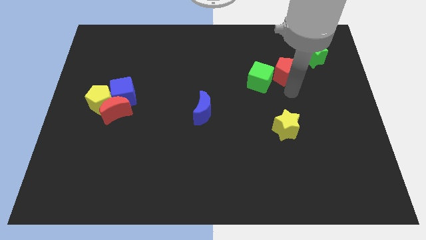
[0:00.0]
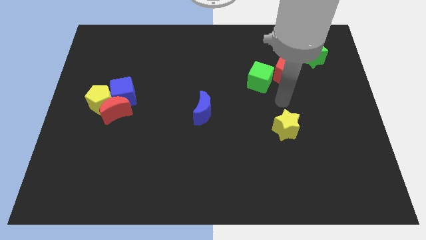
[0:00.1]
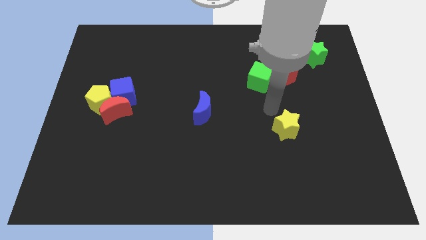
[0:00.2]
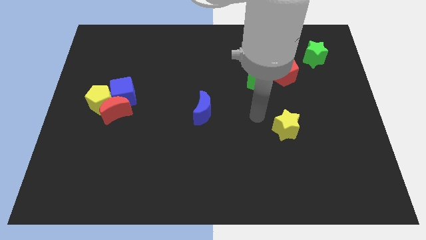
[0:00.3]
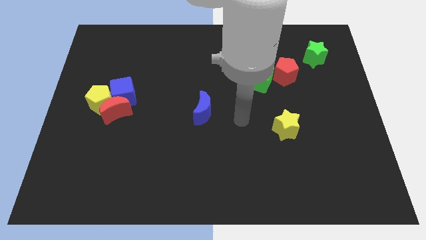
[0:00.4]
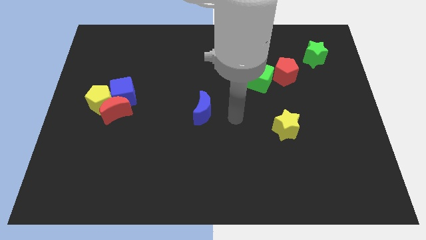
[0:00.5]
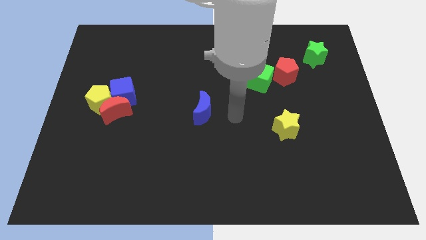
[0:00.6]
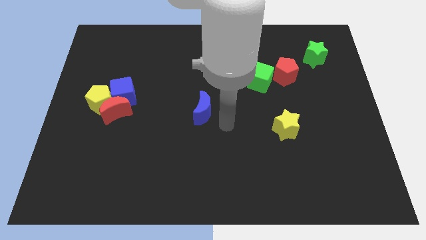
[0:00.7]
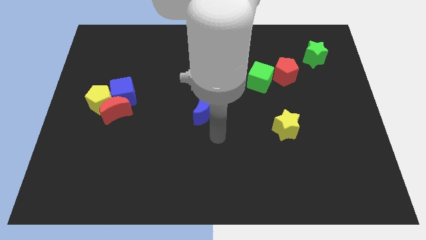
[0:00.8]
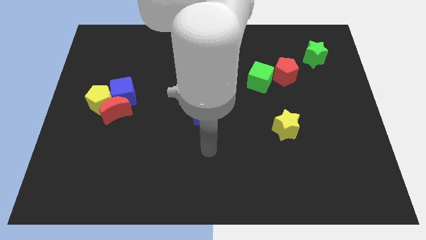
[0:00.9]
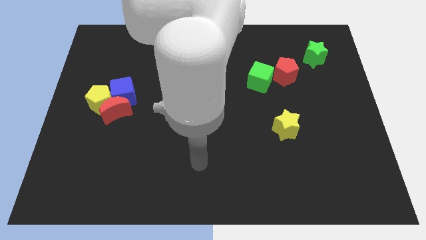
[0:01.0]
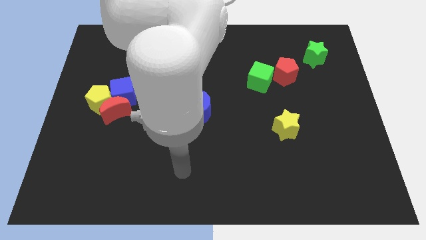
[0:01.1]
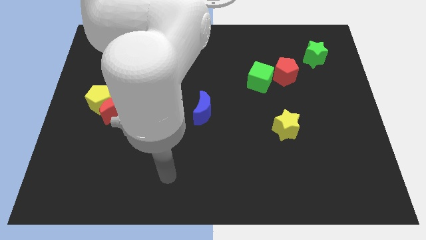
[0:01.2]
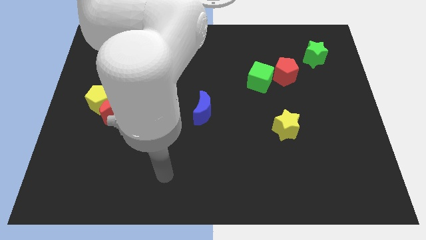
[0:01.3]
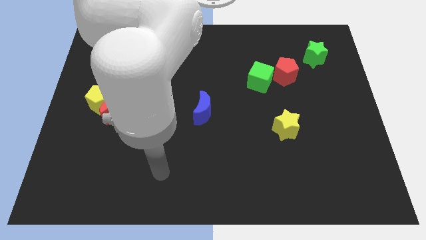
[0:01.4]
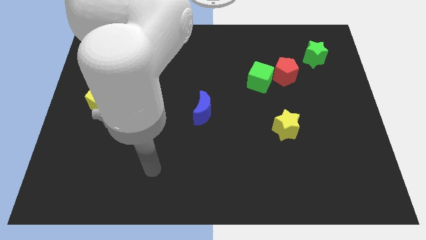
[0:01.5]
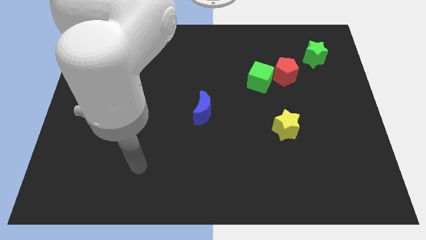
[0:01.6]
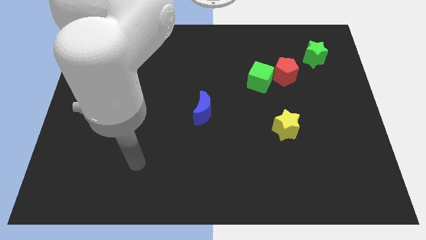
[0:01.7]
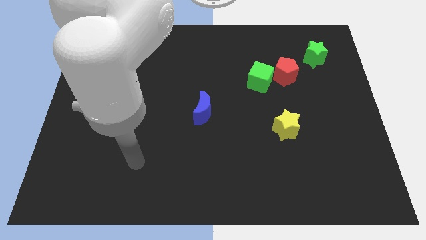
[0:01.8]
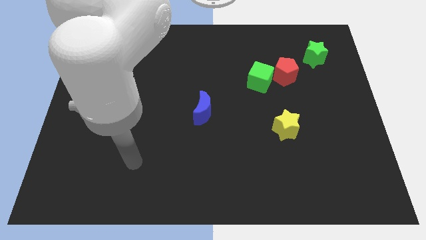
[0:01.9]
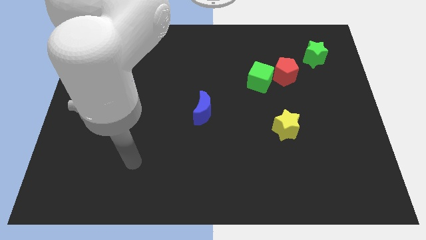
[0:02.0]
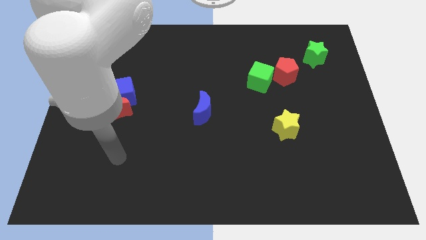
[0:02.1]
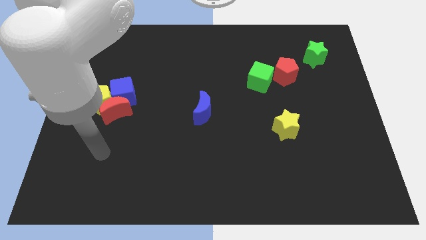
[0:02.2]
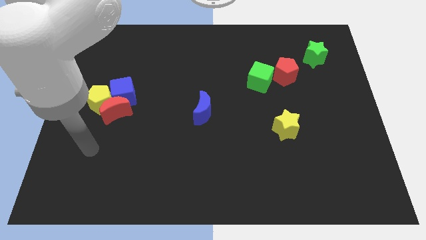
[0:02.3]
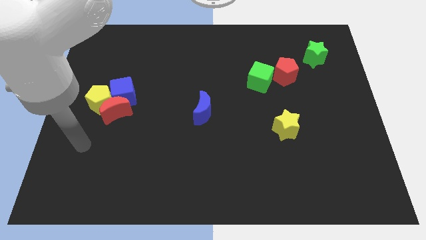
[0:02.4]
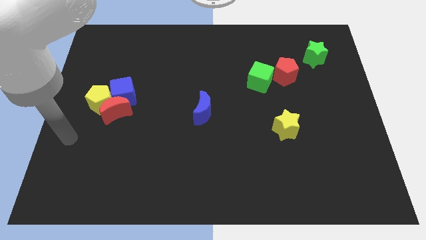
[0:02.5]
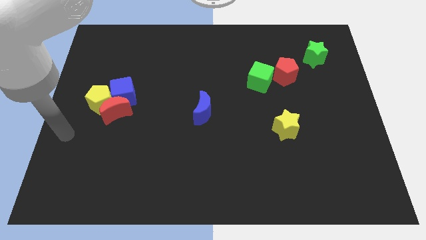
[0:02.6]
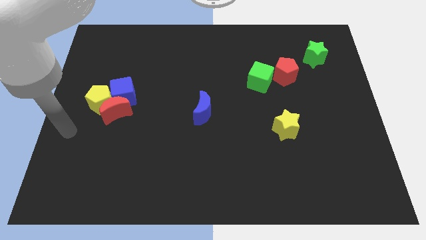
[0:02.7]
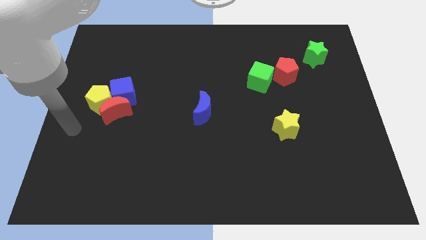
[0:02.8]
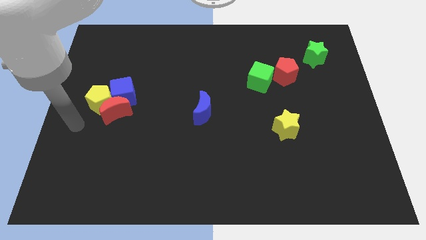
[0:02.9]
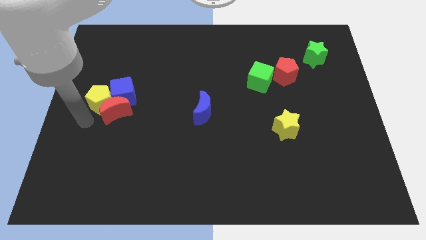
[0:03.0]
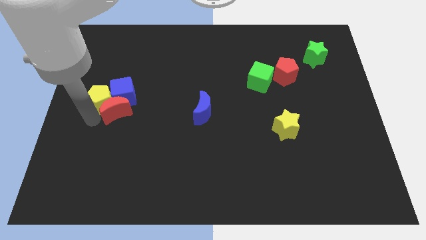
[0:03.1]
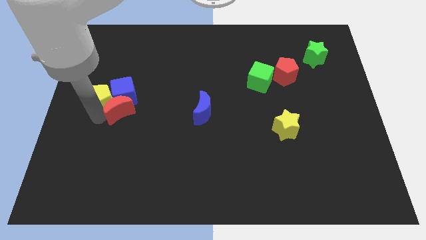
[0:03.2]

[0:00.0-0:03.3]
go away from the red moon

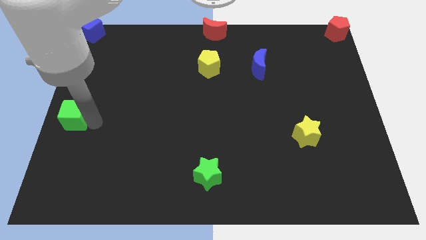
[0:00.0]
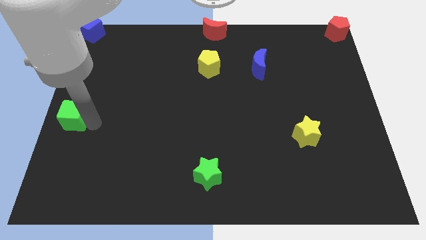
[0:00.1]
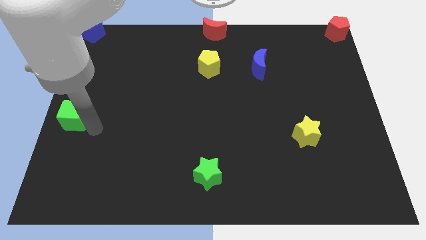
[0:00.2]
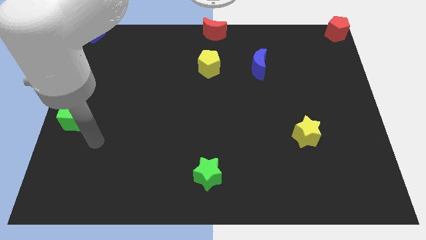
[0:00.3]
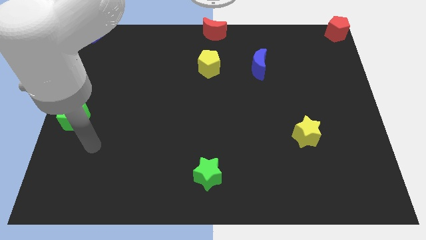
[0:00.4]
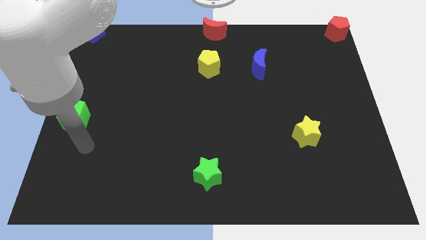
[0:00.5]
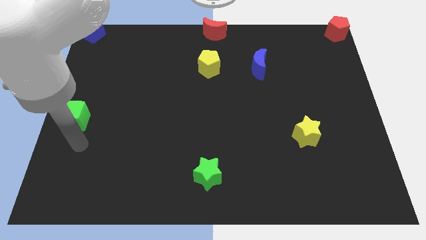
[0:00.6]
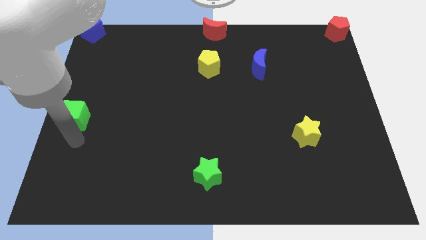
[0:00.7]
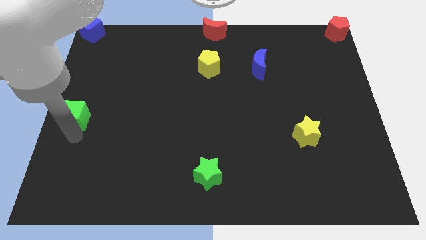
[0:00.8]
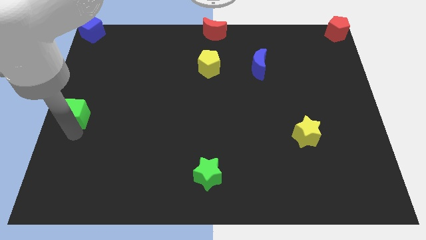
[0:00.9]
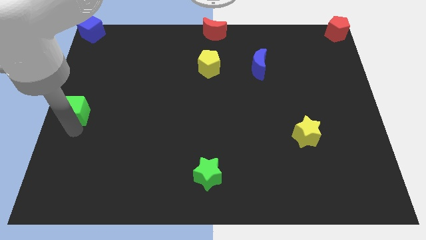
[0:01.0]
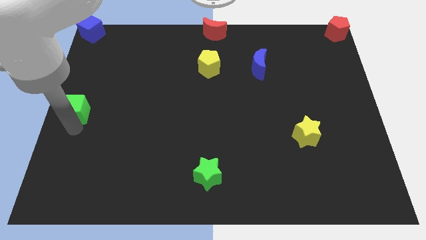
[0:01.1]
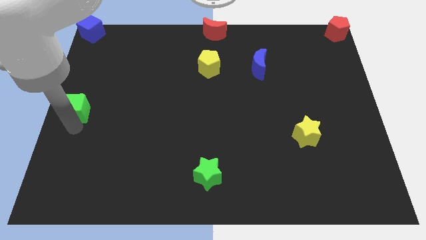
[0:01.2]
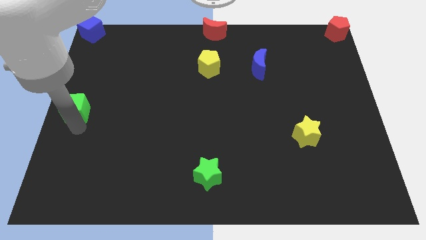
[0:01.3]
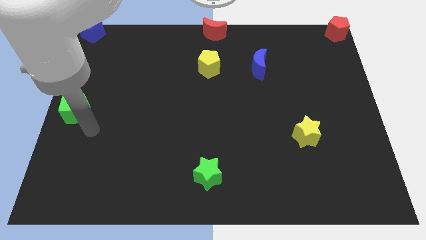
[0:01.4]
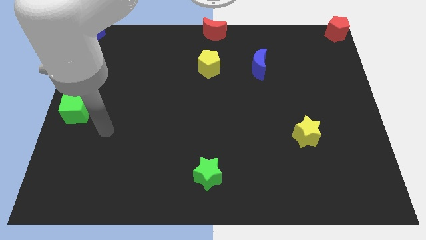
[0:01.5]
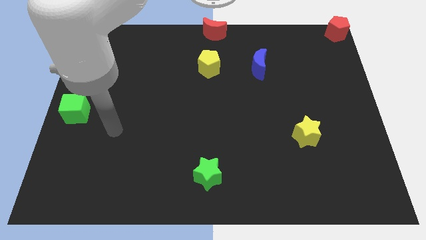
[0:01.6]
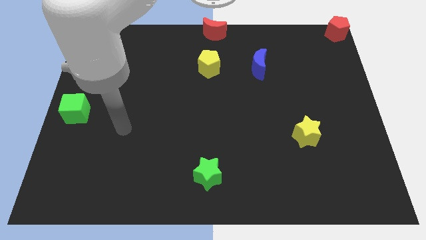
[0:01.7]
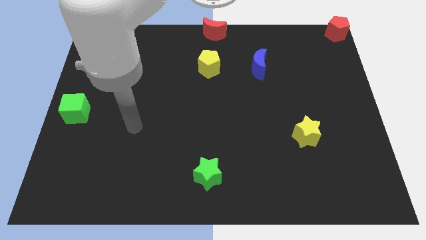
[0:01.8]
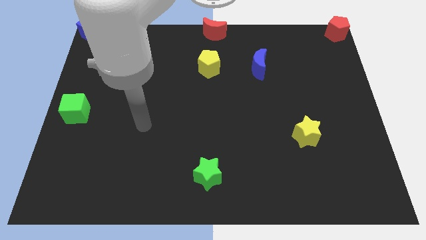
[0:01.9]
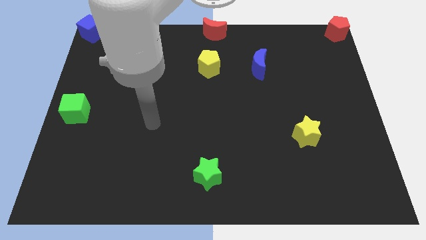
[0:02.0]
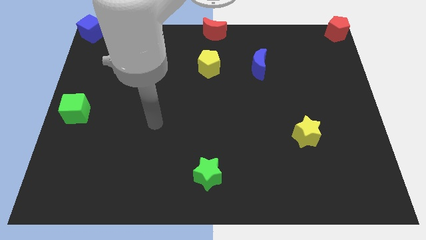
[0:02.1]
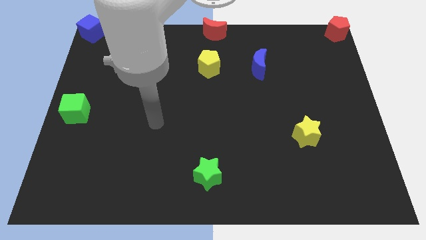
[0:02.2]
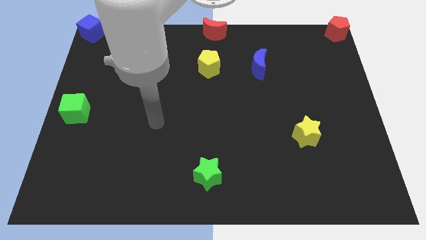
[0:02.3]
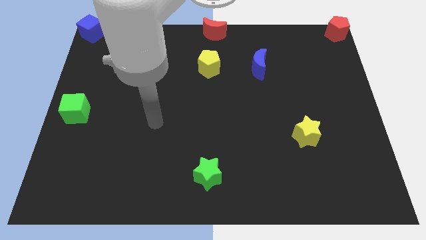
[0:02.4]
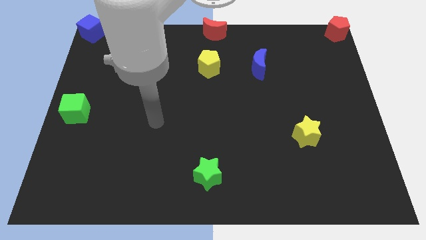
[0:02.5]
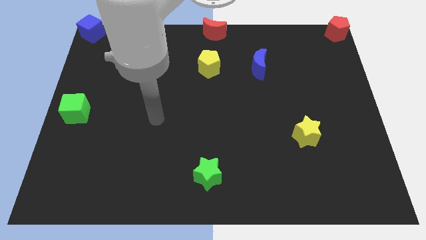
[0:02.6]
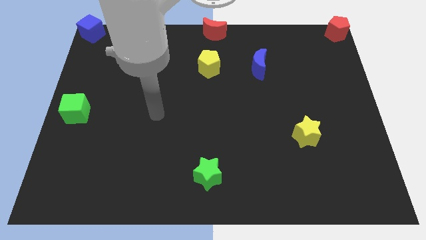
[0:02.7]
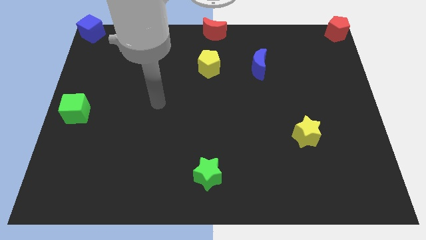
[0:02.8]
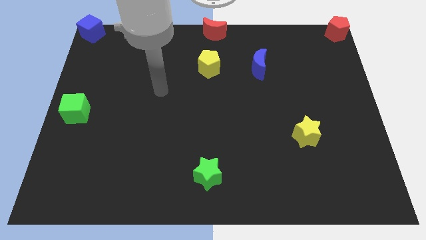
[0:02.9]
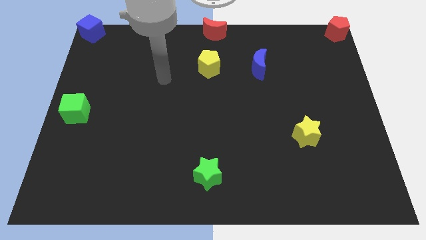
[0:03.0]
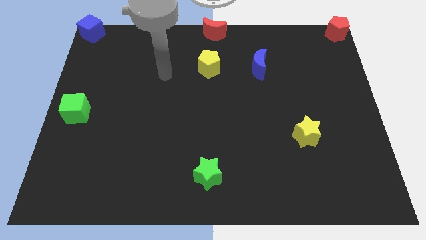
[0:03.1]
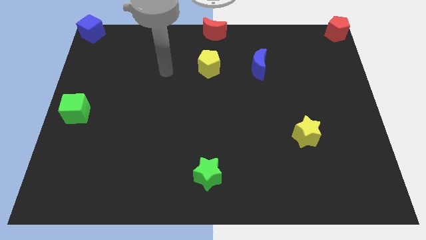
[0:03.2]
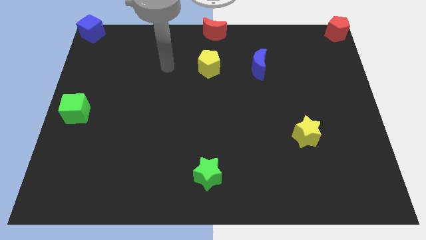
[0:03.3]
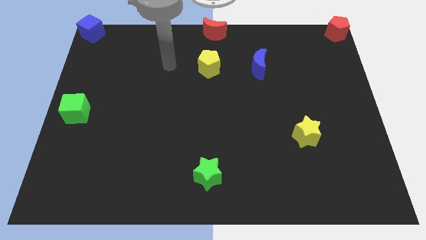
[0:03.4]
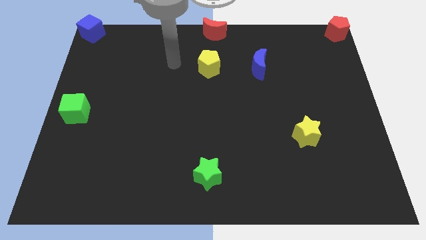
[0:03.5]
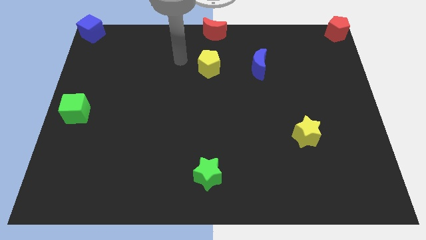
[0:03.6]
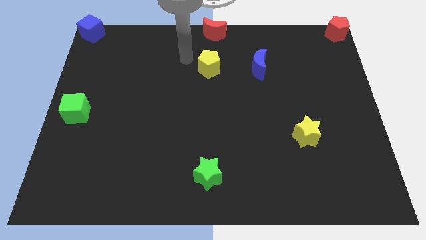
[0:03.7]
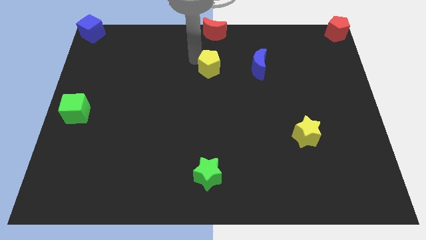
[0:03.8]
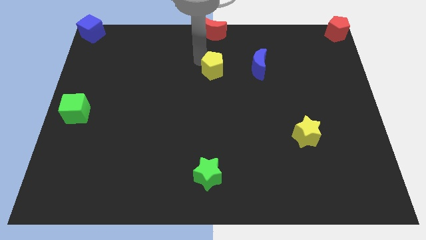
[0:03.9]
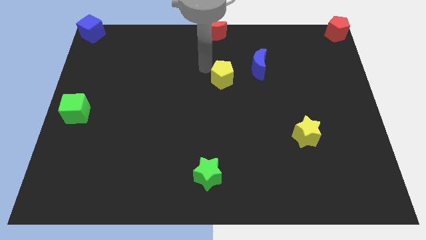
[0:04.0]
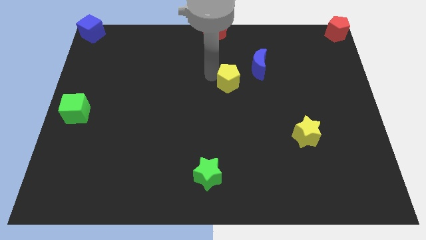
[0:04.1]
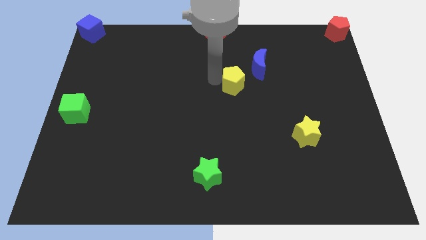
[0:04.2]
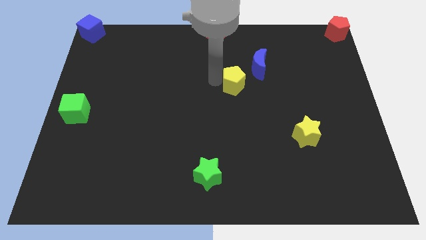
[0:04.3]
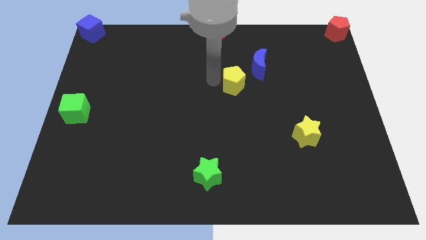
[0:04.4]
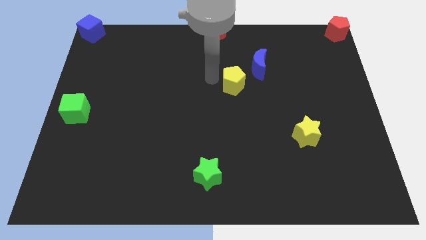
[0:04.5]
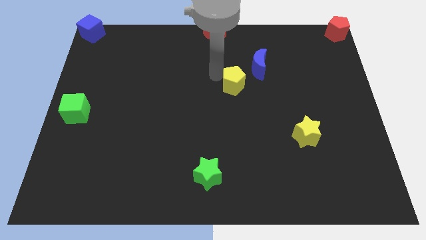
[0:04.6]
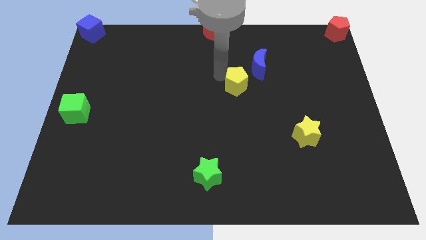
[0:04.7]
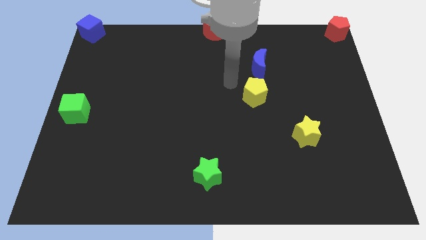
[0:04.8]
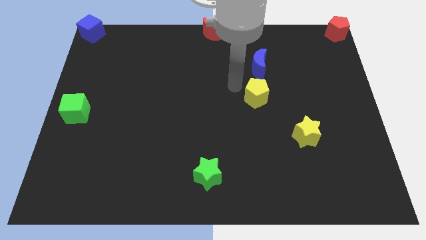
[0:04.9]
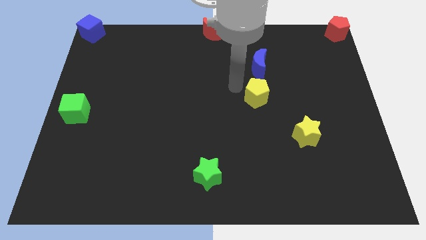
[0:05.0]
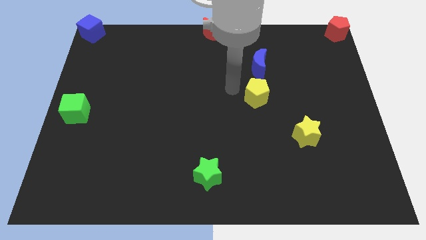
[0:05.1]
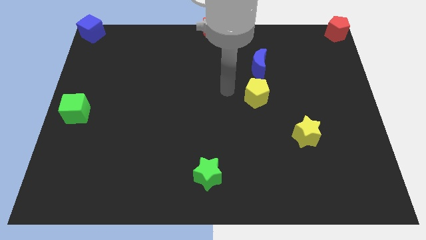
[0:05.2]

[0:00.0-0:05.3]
place the yellow pentagon below the blue moon

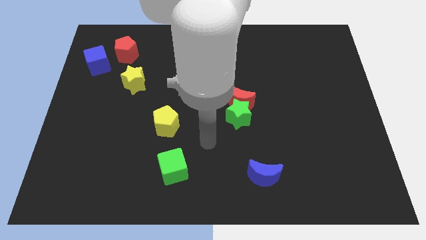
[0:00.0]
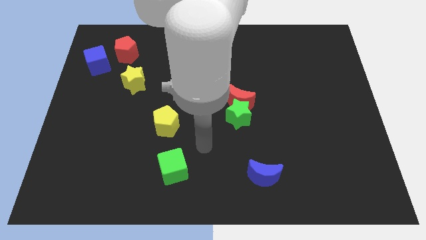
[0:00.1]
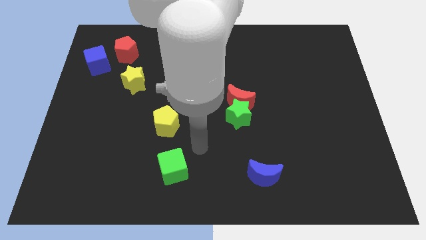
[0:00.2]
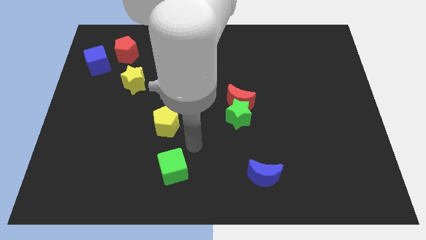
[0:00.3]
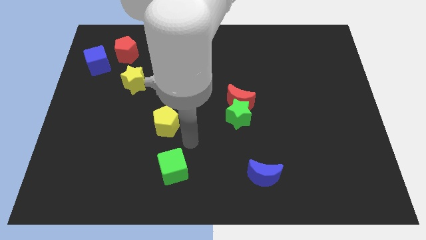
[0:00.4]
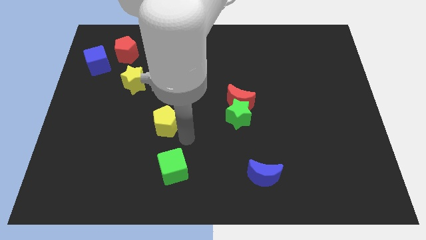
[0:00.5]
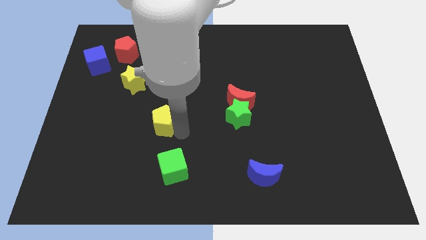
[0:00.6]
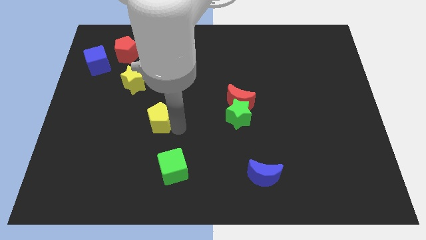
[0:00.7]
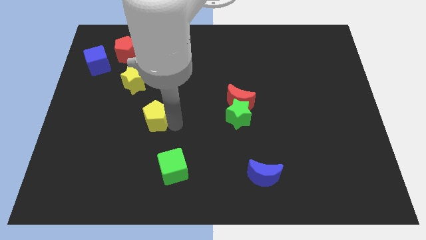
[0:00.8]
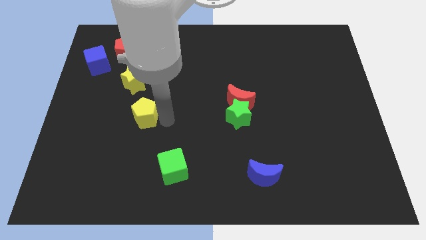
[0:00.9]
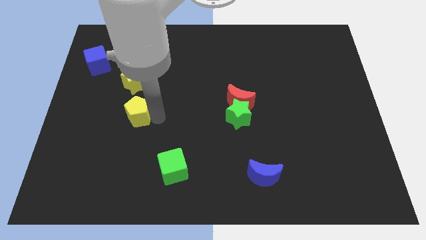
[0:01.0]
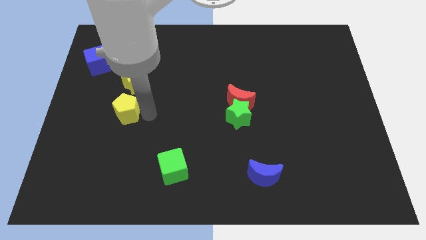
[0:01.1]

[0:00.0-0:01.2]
slide the yellow pentagon below the yellow star
